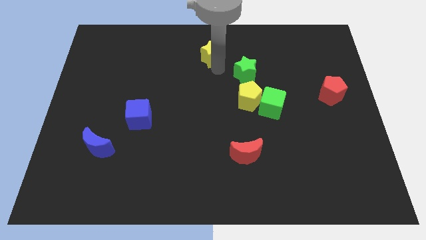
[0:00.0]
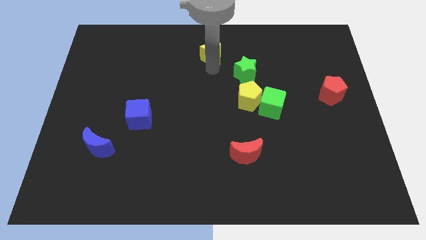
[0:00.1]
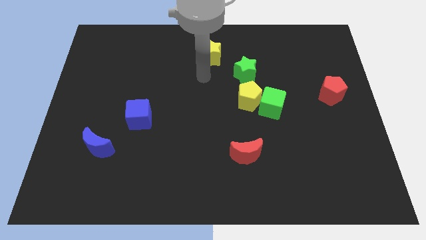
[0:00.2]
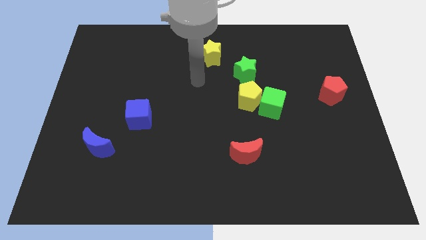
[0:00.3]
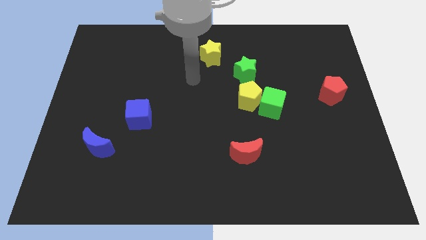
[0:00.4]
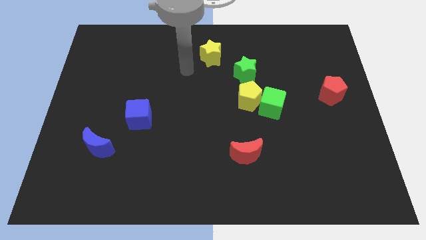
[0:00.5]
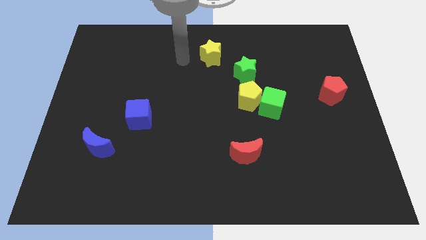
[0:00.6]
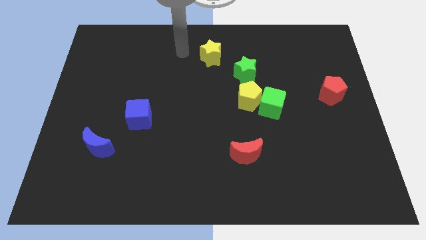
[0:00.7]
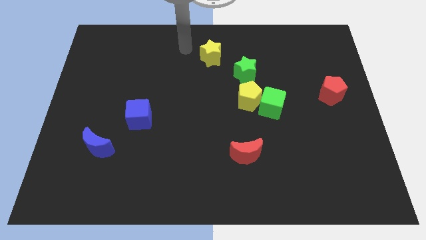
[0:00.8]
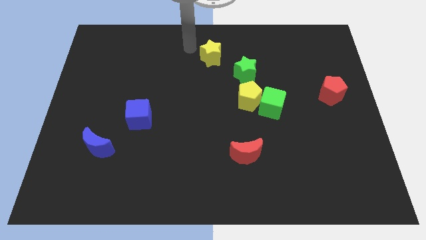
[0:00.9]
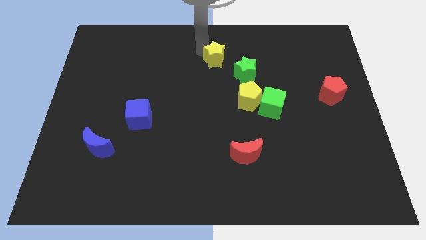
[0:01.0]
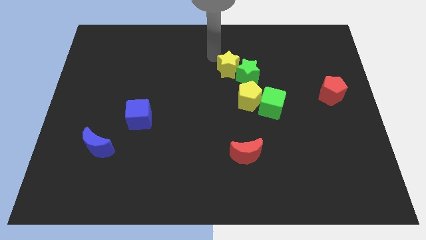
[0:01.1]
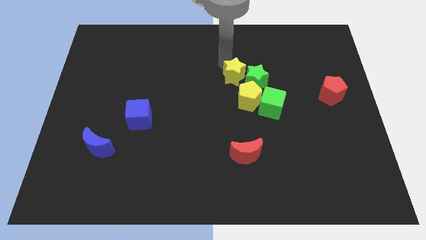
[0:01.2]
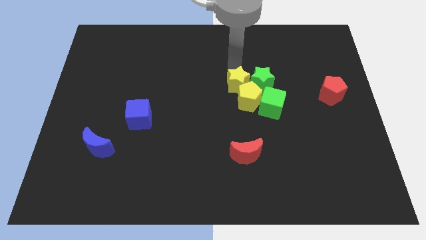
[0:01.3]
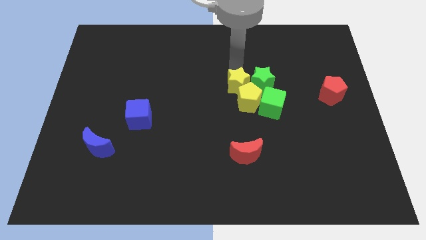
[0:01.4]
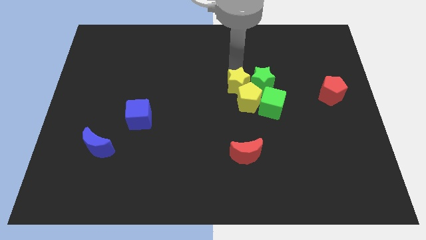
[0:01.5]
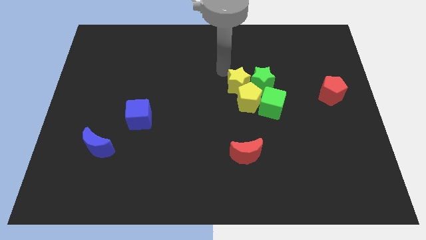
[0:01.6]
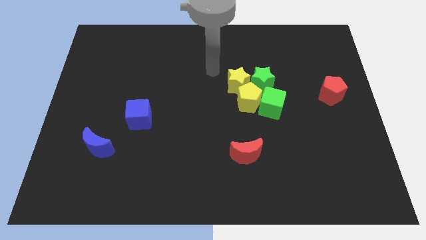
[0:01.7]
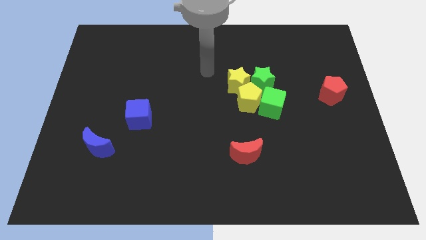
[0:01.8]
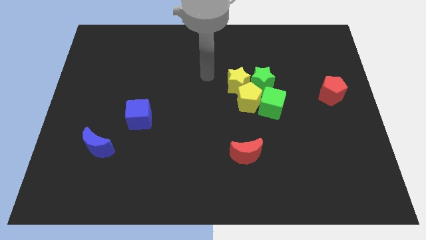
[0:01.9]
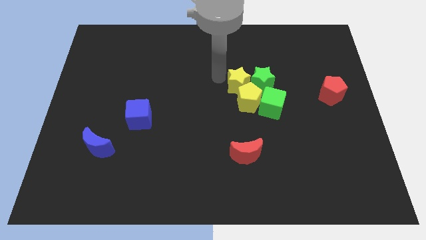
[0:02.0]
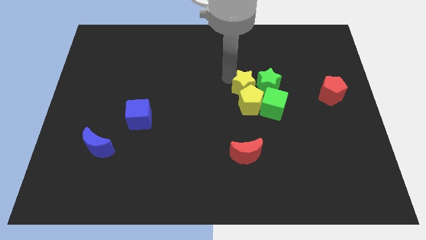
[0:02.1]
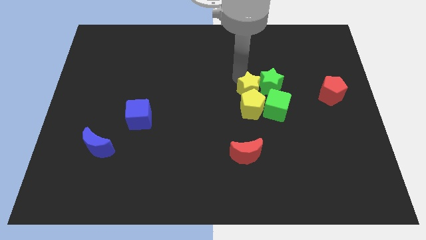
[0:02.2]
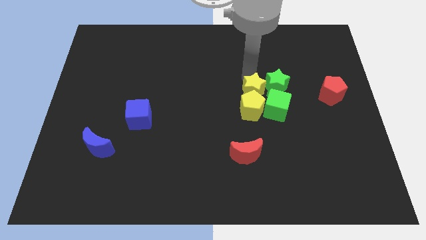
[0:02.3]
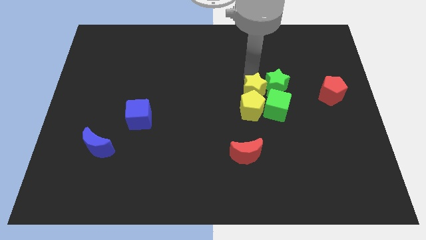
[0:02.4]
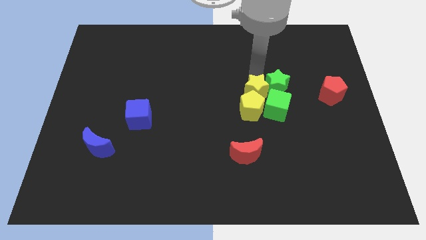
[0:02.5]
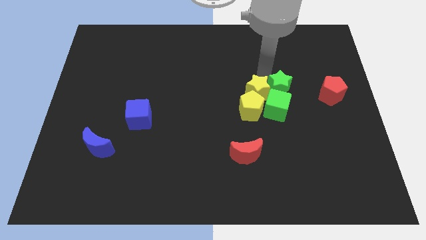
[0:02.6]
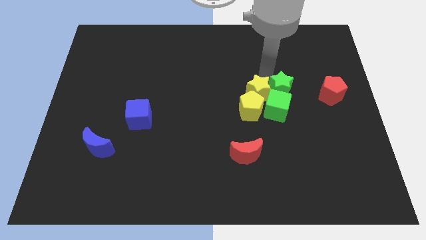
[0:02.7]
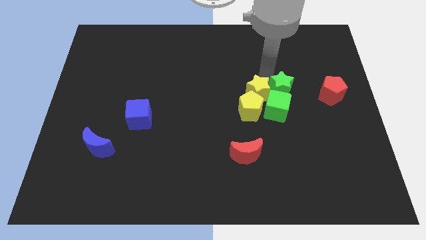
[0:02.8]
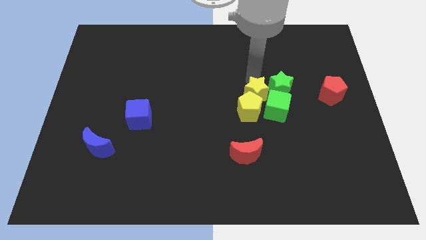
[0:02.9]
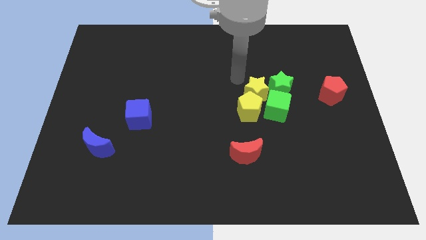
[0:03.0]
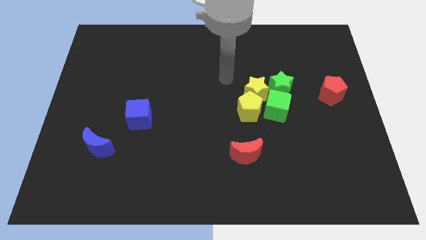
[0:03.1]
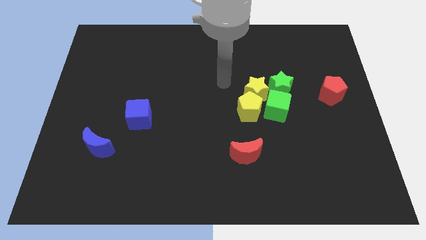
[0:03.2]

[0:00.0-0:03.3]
push the yellow star into the group of blocks

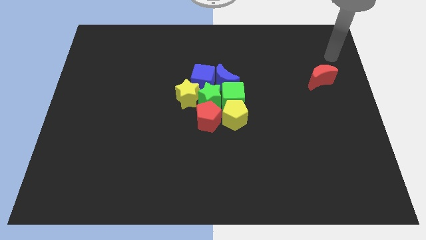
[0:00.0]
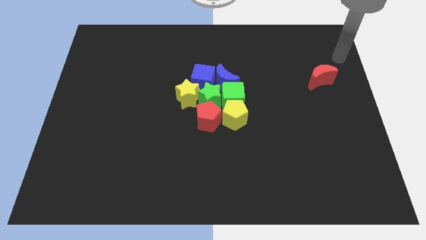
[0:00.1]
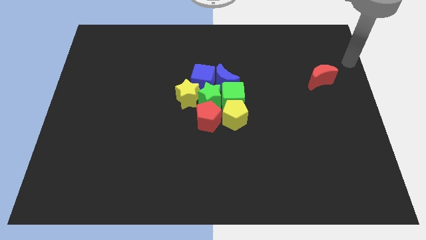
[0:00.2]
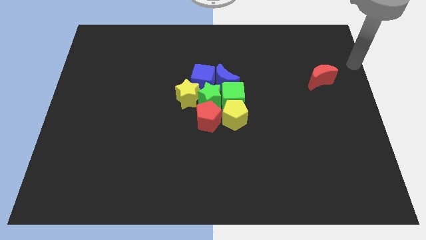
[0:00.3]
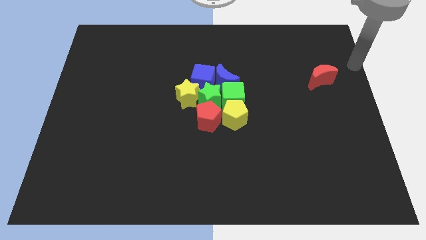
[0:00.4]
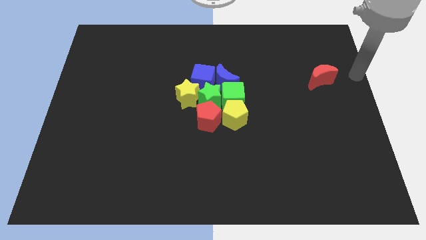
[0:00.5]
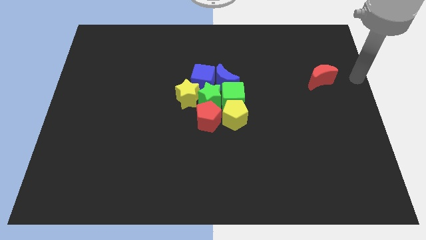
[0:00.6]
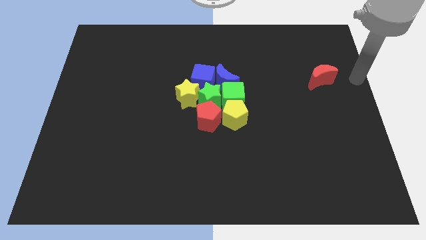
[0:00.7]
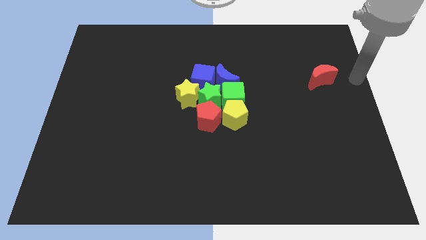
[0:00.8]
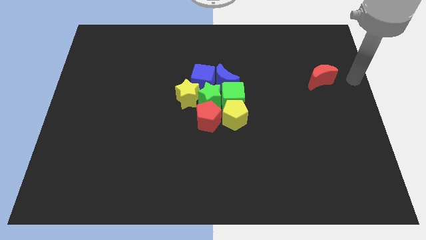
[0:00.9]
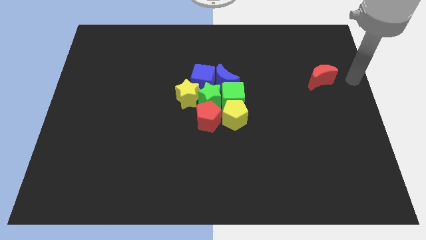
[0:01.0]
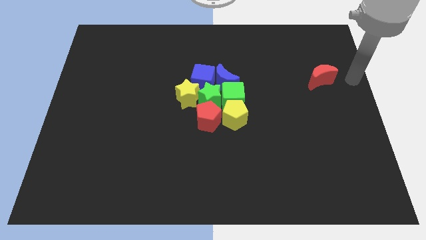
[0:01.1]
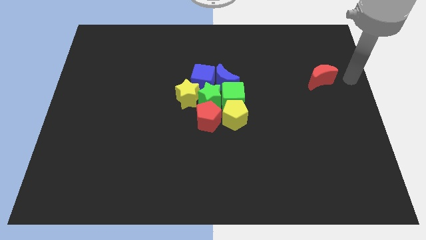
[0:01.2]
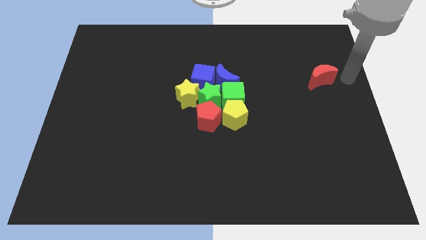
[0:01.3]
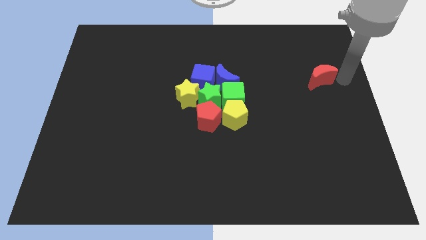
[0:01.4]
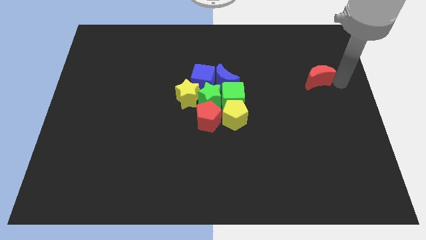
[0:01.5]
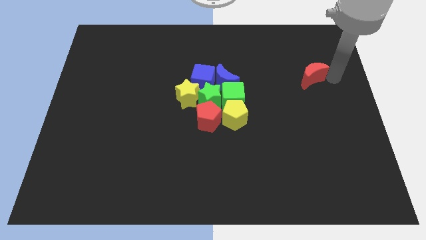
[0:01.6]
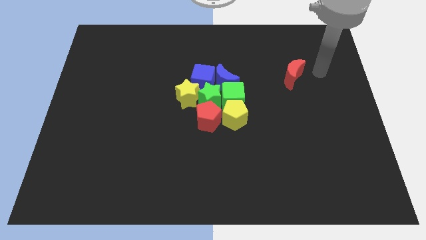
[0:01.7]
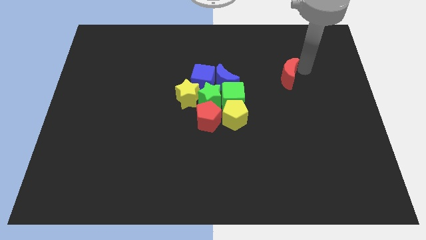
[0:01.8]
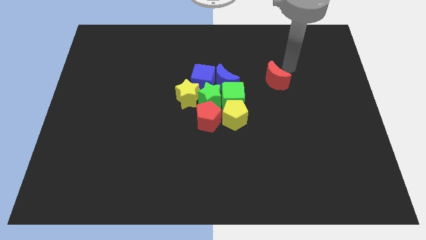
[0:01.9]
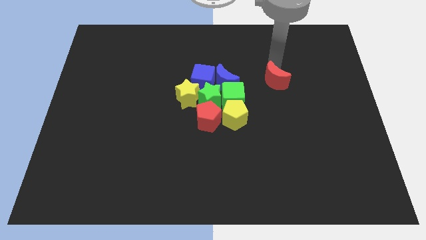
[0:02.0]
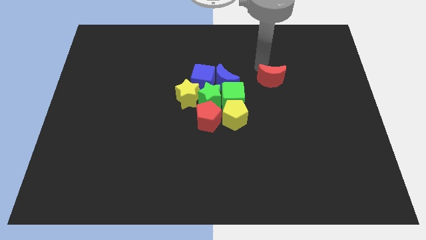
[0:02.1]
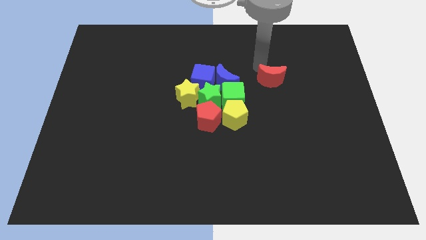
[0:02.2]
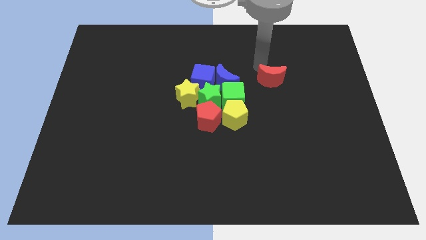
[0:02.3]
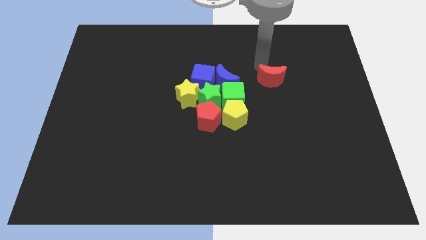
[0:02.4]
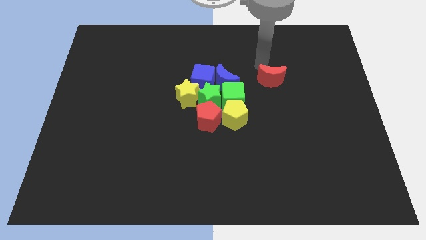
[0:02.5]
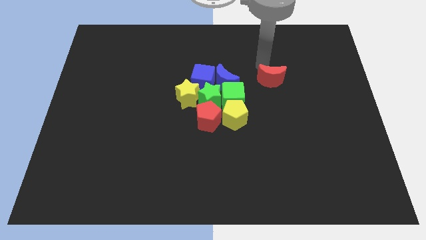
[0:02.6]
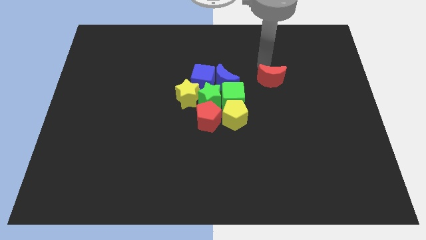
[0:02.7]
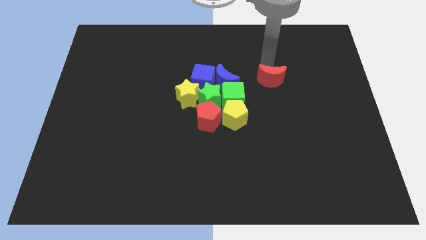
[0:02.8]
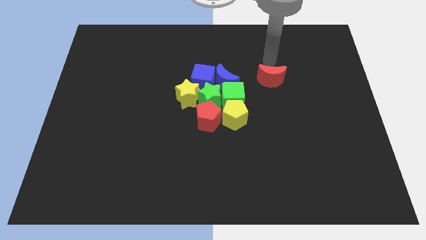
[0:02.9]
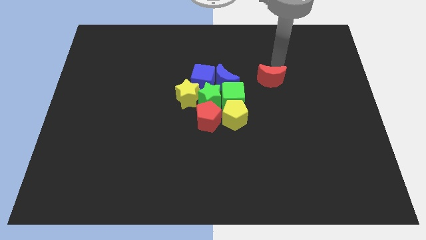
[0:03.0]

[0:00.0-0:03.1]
move red moon towards the green cube

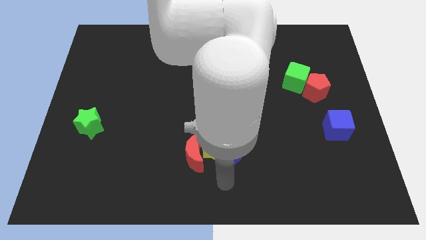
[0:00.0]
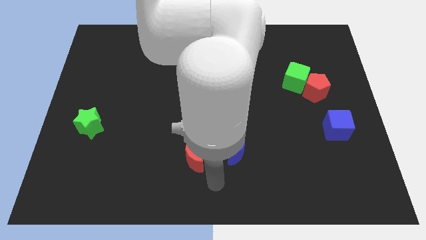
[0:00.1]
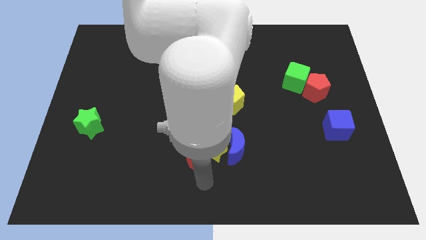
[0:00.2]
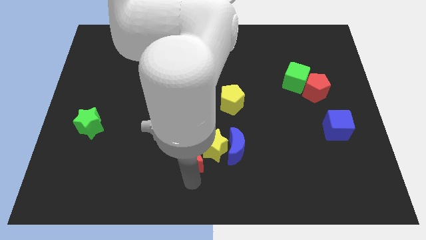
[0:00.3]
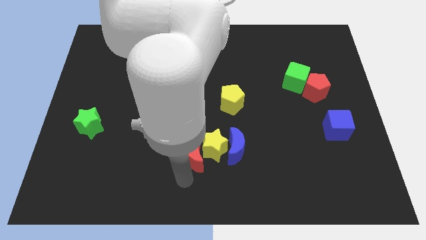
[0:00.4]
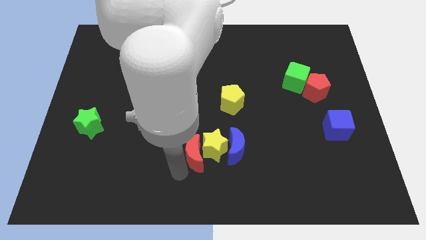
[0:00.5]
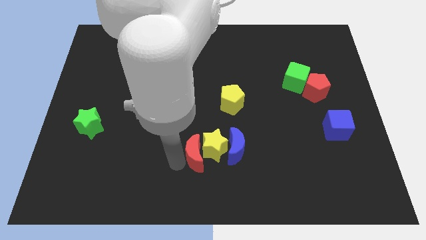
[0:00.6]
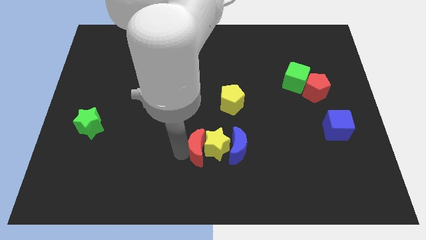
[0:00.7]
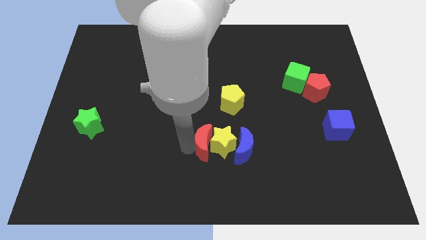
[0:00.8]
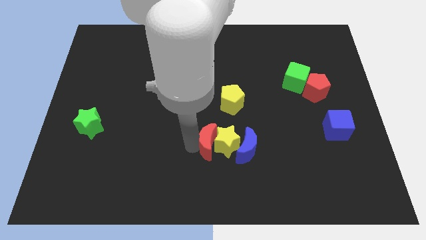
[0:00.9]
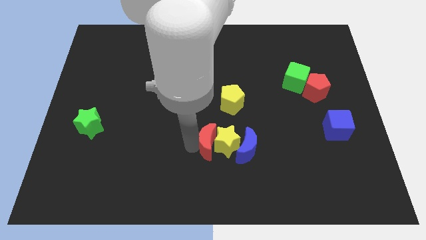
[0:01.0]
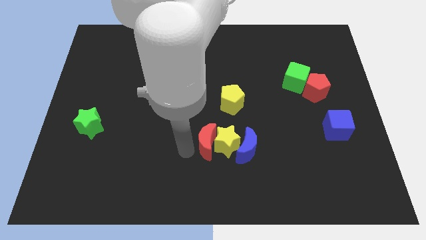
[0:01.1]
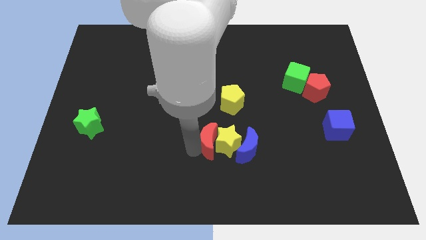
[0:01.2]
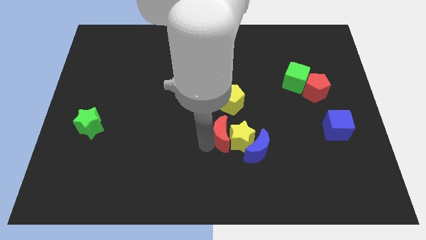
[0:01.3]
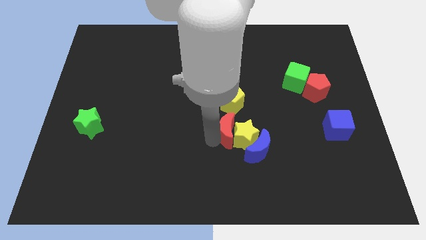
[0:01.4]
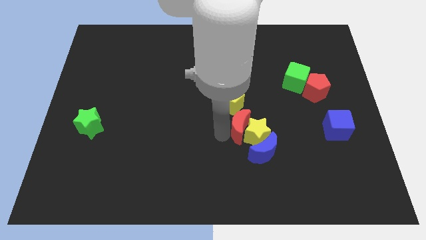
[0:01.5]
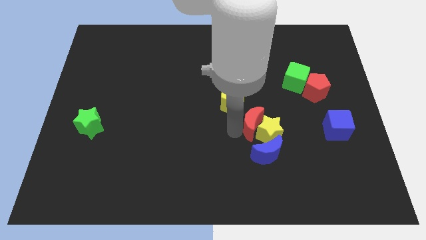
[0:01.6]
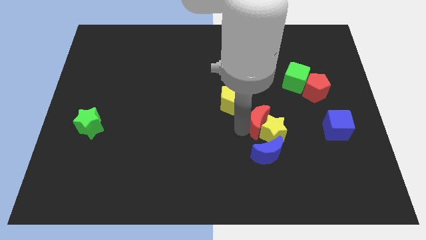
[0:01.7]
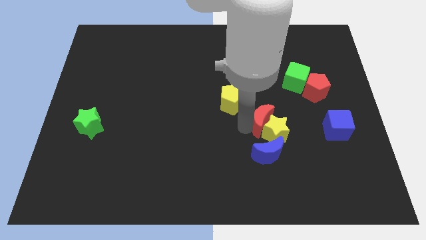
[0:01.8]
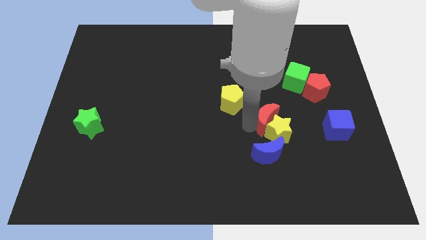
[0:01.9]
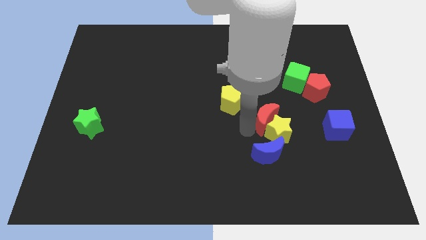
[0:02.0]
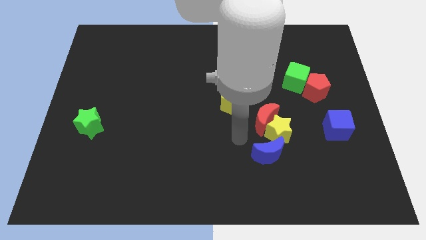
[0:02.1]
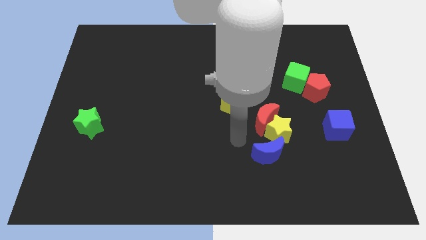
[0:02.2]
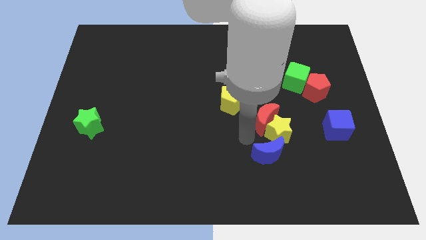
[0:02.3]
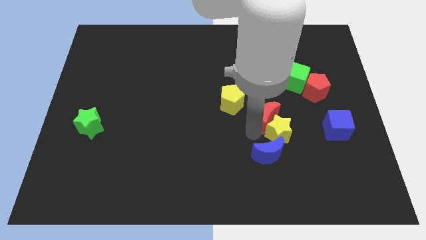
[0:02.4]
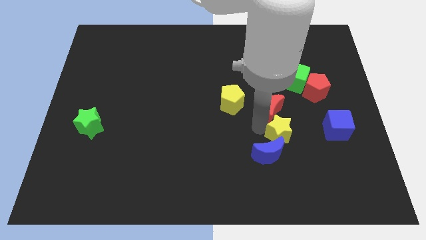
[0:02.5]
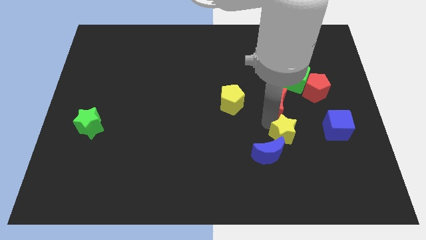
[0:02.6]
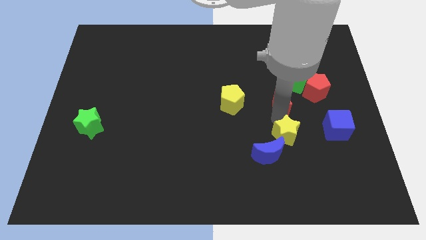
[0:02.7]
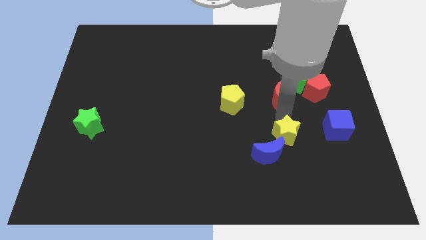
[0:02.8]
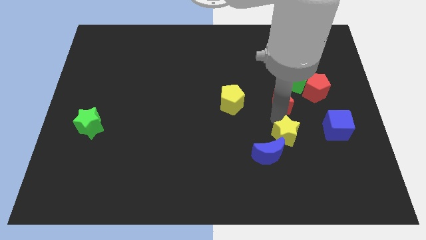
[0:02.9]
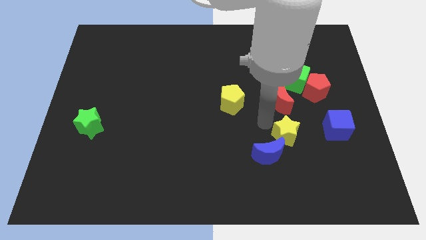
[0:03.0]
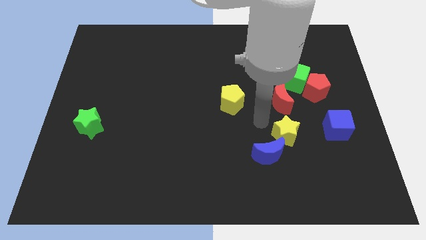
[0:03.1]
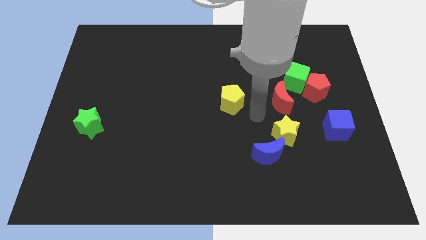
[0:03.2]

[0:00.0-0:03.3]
move the red crescent to the top of the yellow star
